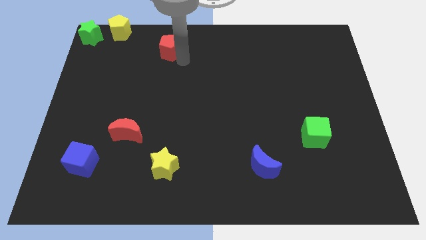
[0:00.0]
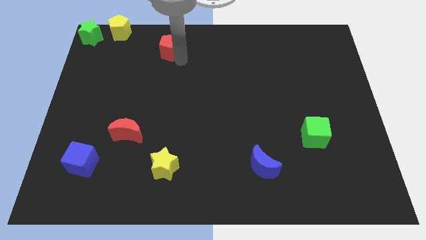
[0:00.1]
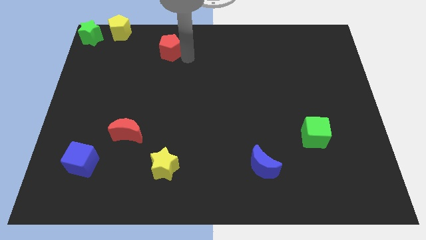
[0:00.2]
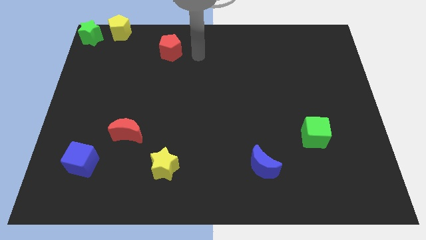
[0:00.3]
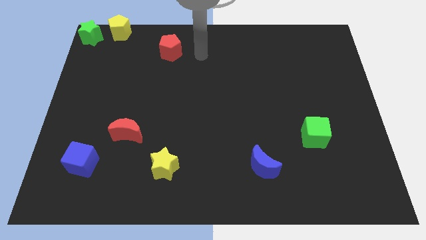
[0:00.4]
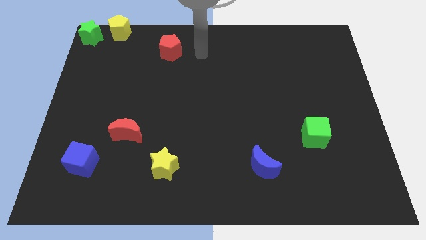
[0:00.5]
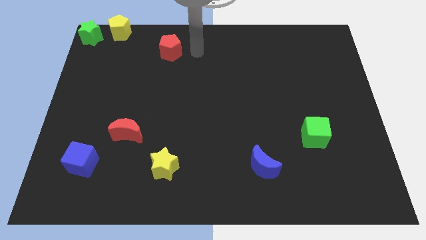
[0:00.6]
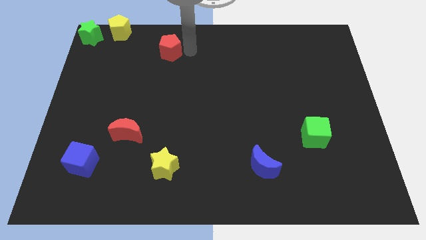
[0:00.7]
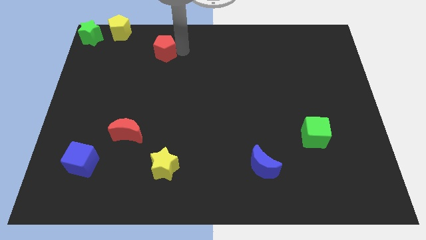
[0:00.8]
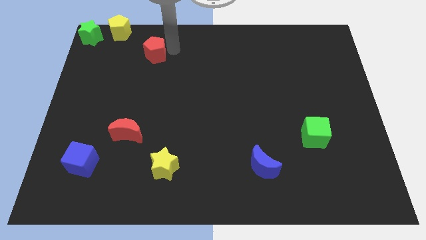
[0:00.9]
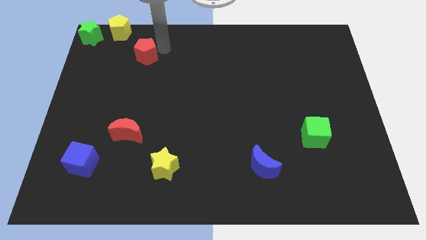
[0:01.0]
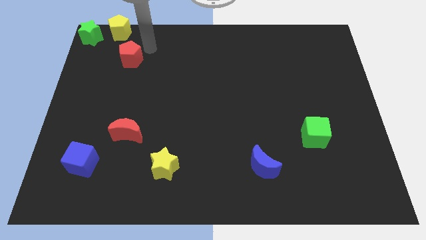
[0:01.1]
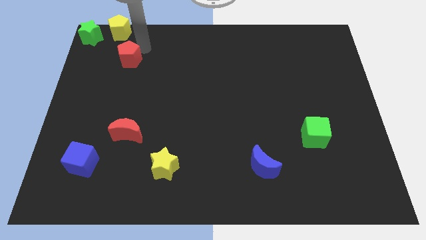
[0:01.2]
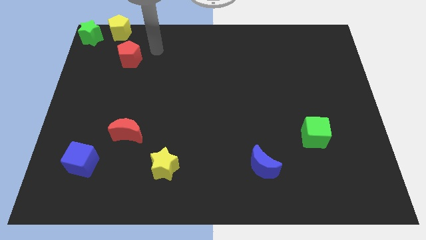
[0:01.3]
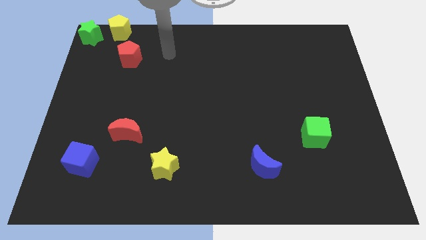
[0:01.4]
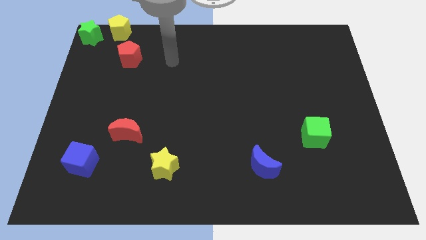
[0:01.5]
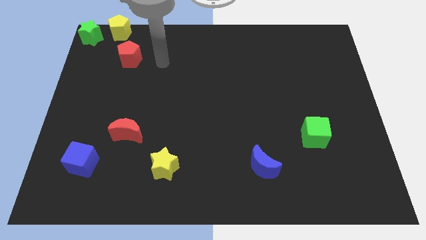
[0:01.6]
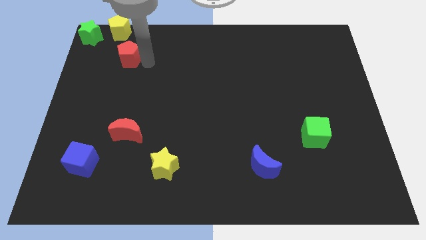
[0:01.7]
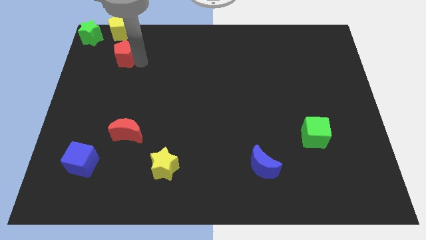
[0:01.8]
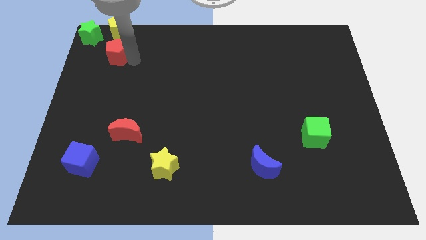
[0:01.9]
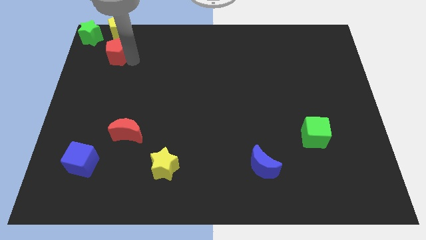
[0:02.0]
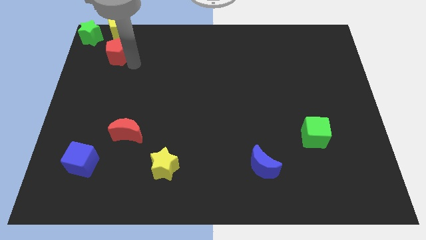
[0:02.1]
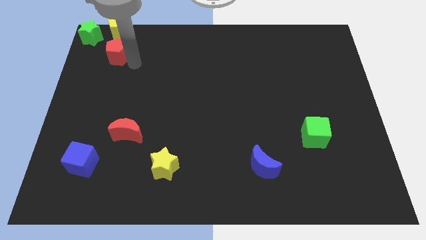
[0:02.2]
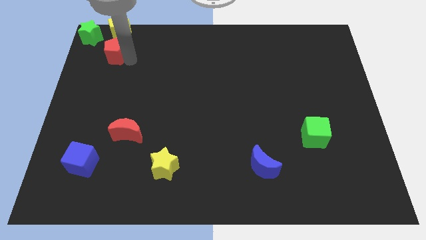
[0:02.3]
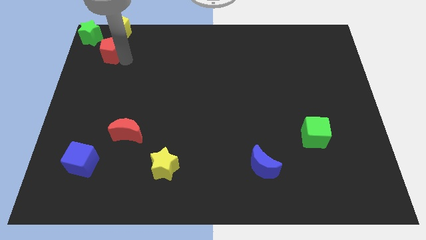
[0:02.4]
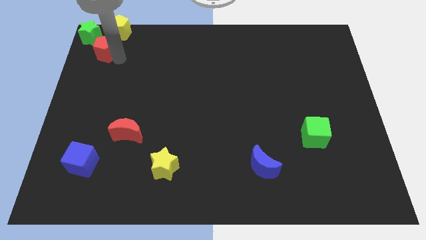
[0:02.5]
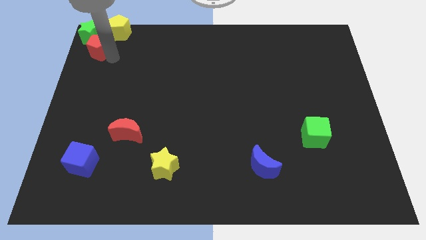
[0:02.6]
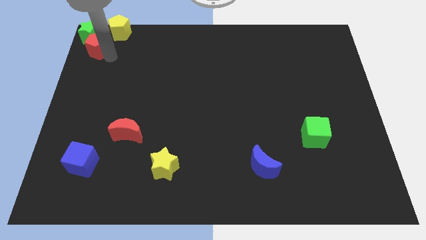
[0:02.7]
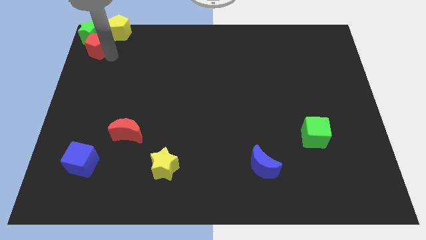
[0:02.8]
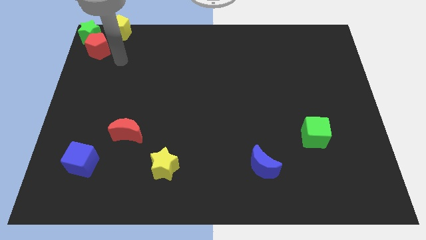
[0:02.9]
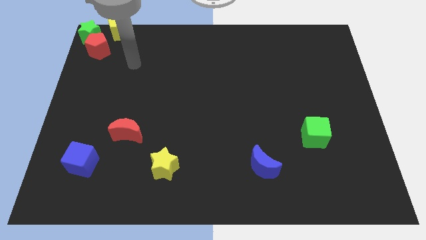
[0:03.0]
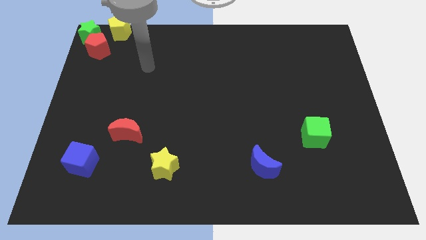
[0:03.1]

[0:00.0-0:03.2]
push the red pentagon close to the green star

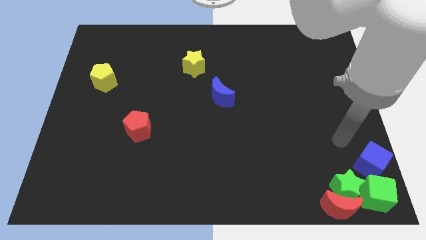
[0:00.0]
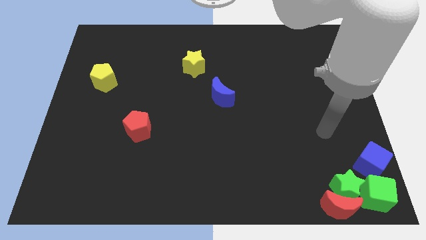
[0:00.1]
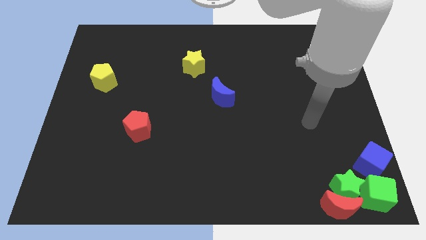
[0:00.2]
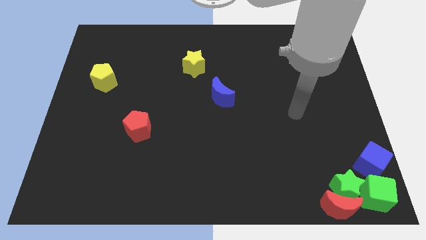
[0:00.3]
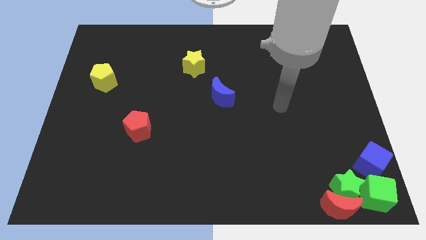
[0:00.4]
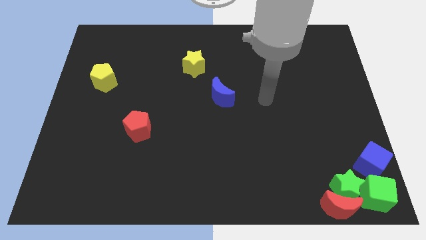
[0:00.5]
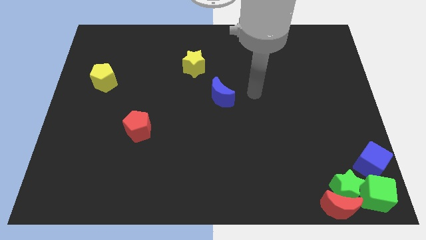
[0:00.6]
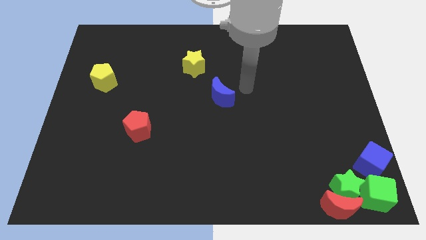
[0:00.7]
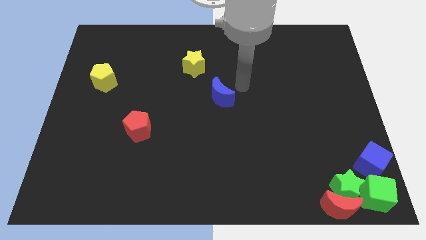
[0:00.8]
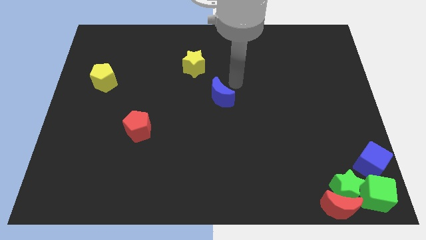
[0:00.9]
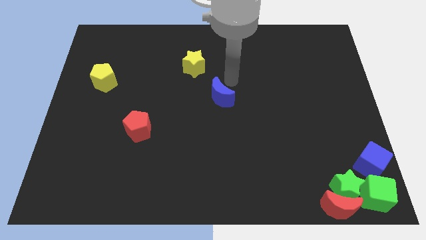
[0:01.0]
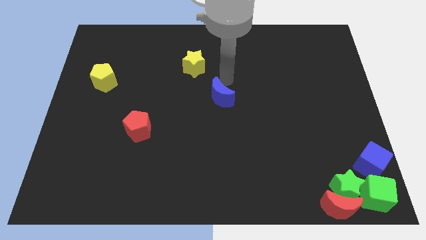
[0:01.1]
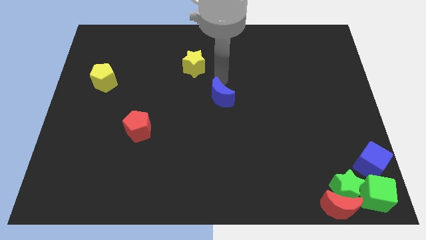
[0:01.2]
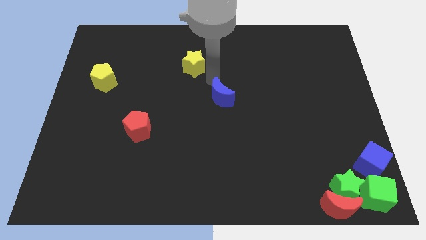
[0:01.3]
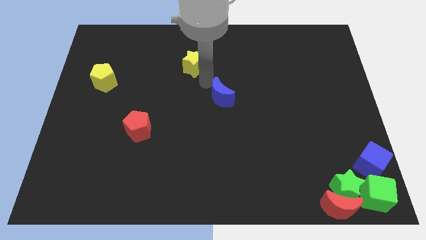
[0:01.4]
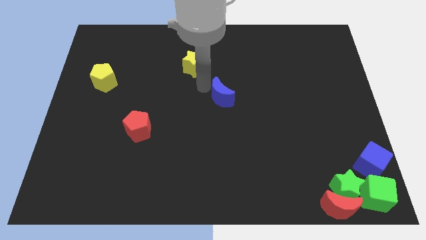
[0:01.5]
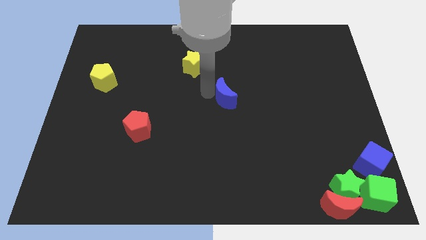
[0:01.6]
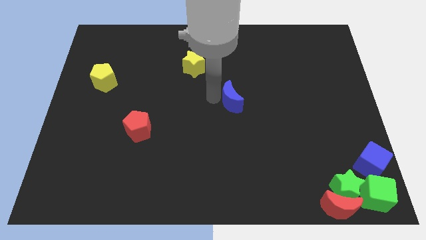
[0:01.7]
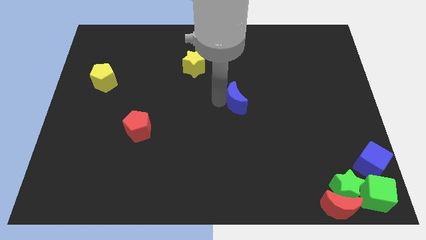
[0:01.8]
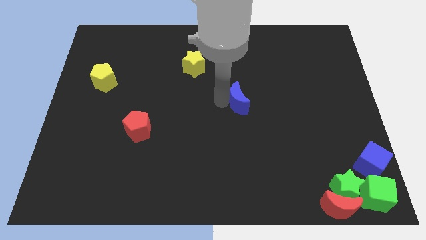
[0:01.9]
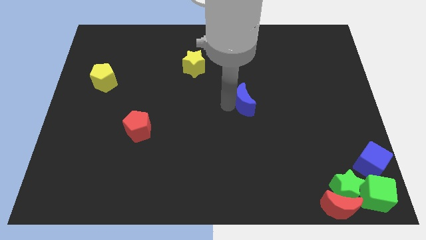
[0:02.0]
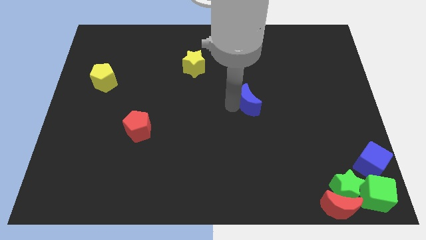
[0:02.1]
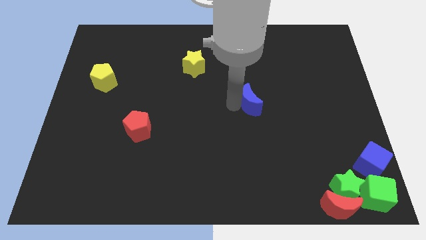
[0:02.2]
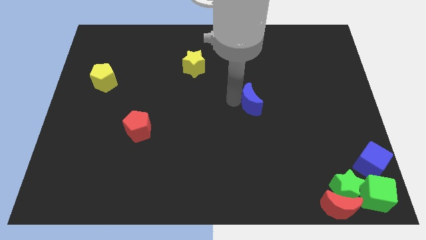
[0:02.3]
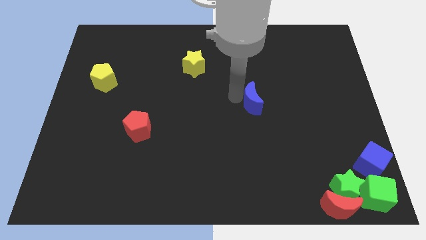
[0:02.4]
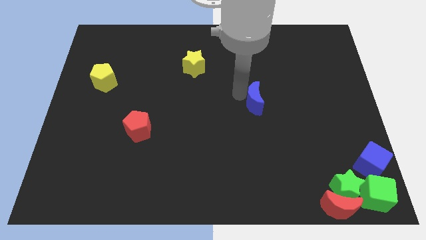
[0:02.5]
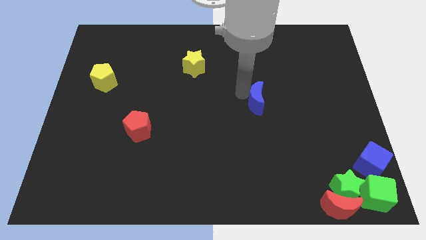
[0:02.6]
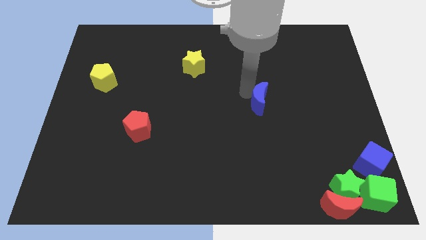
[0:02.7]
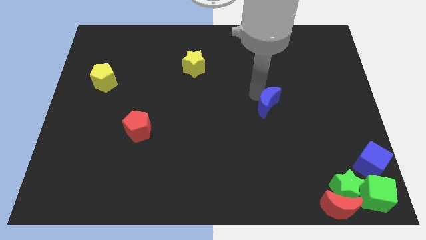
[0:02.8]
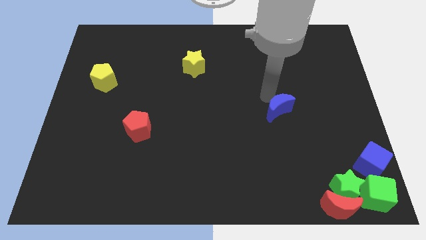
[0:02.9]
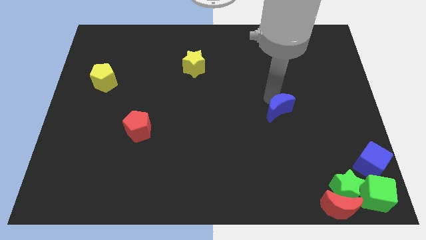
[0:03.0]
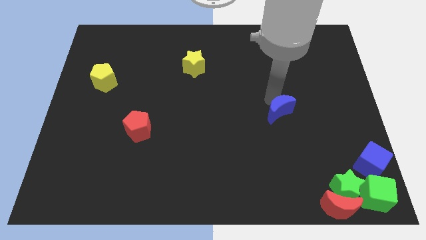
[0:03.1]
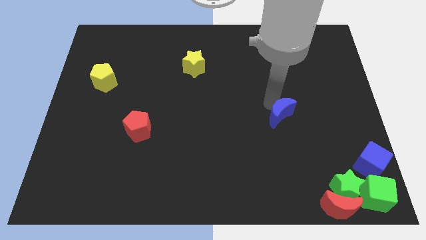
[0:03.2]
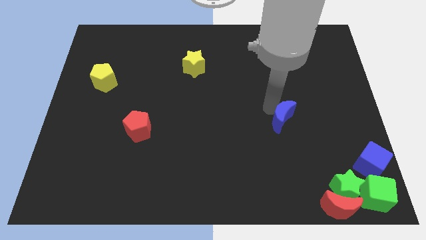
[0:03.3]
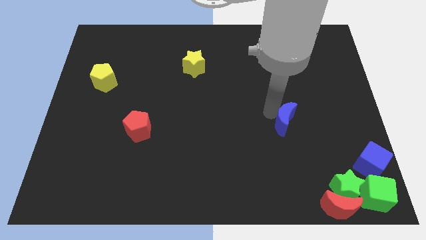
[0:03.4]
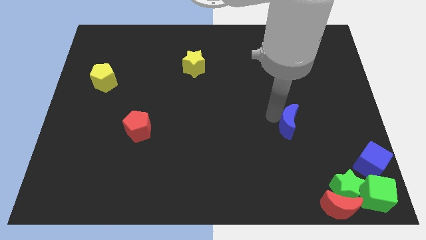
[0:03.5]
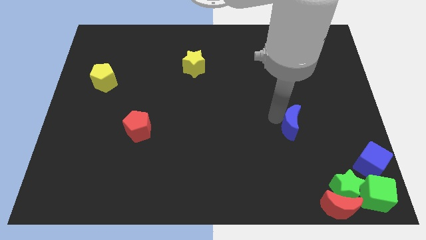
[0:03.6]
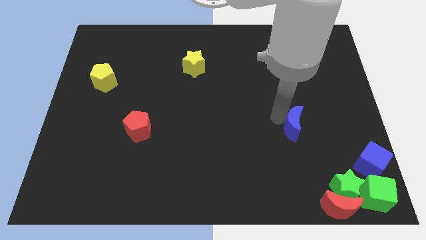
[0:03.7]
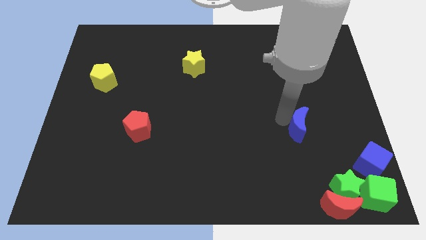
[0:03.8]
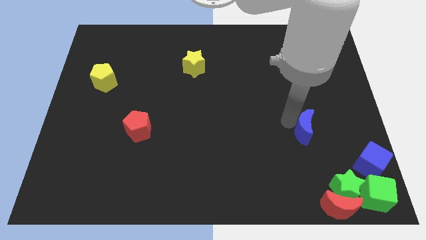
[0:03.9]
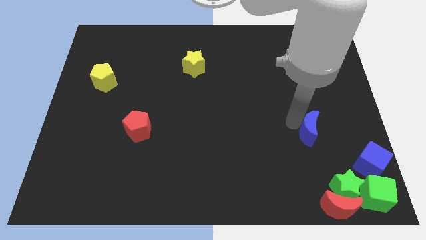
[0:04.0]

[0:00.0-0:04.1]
slide the blue moon diagonal top left to the green star

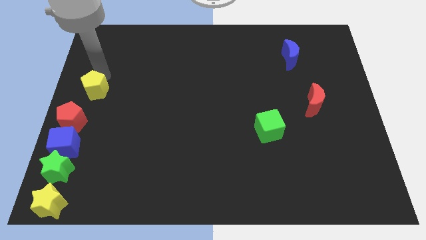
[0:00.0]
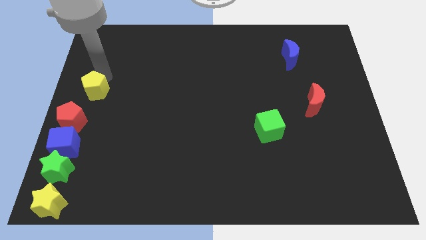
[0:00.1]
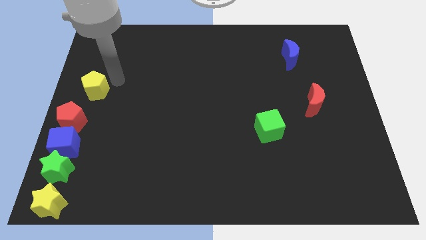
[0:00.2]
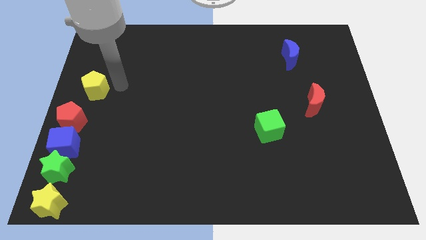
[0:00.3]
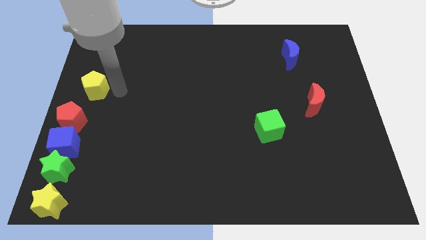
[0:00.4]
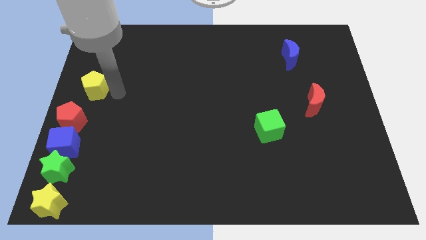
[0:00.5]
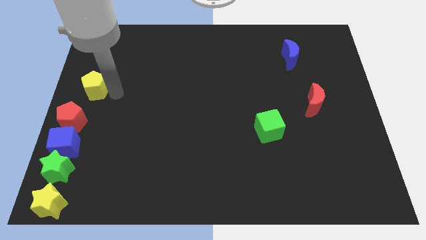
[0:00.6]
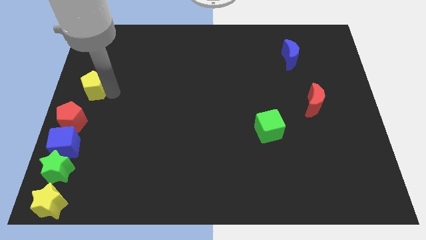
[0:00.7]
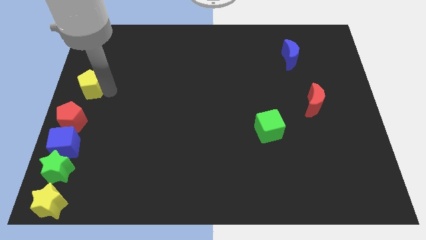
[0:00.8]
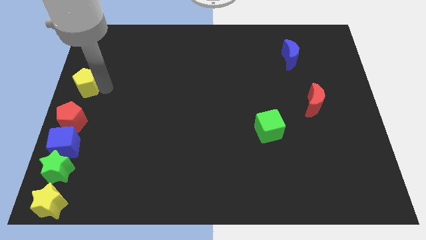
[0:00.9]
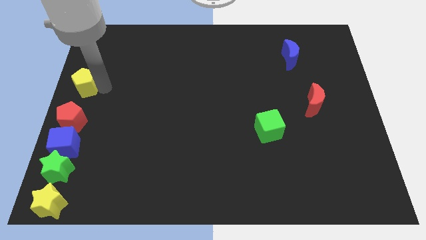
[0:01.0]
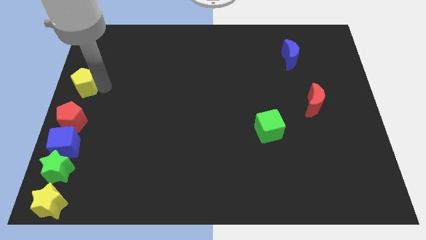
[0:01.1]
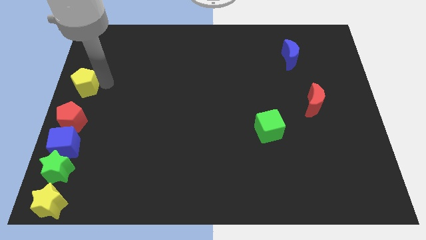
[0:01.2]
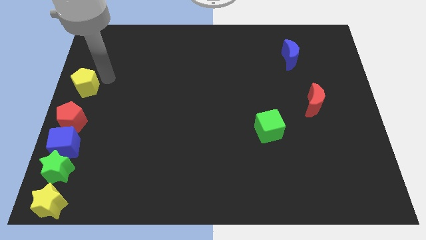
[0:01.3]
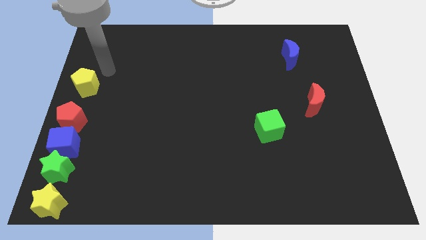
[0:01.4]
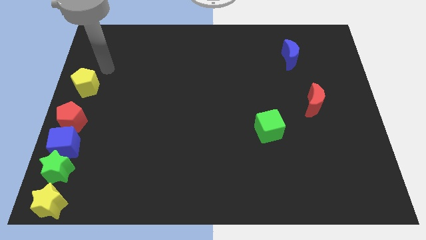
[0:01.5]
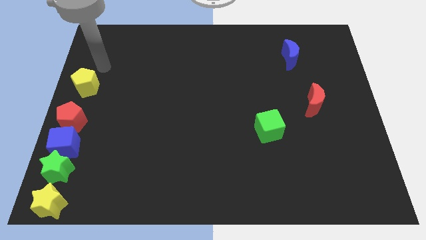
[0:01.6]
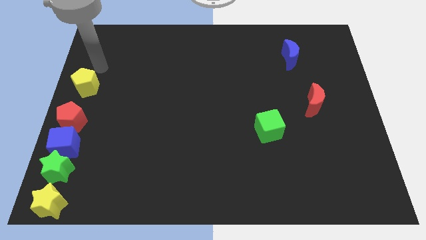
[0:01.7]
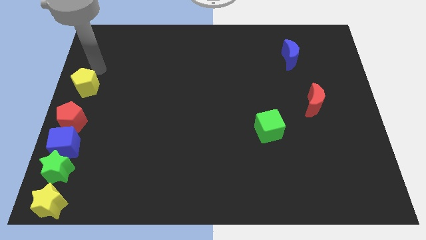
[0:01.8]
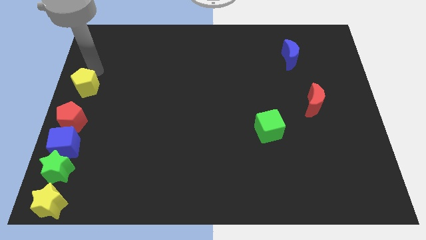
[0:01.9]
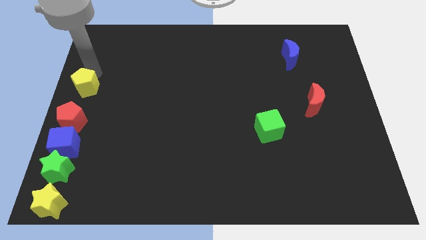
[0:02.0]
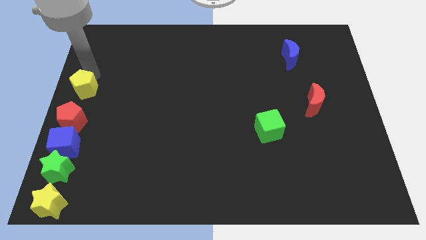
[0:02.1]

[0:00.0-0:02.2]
place yellow pentagon on top of red pentagon
